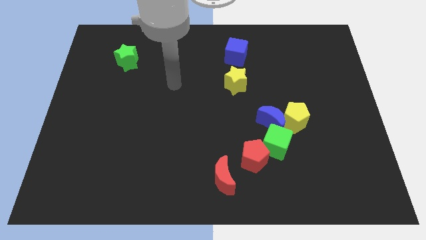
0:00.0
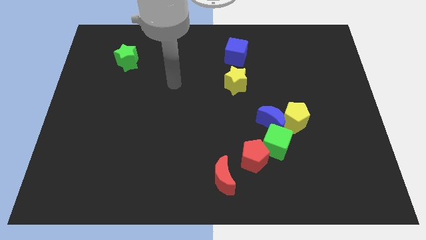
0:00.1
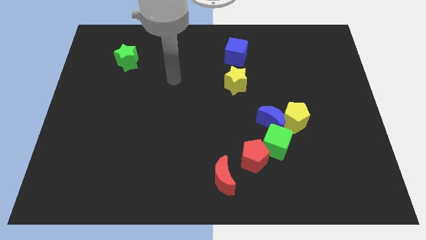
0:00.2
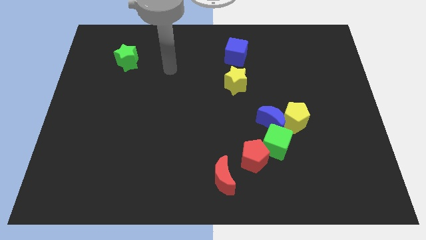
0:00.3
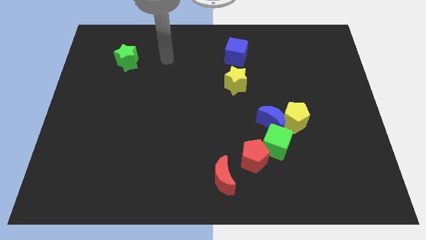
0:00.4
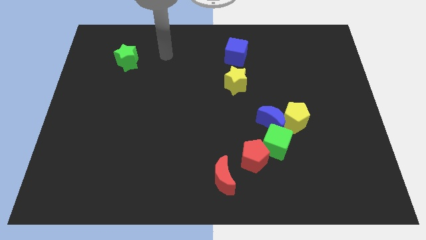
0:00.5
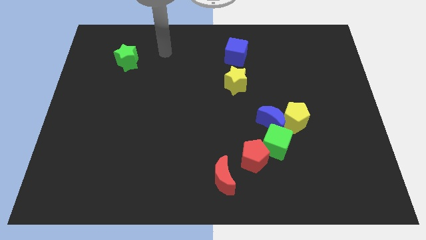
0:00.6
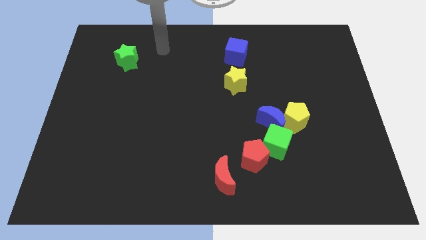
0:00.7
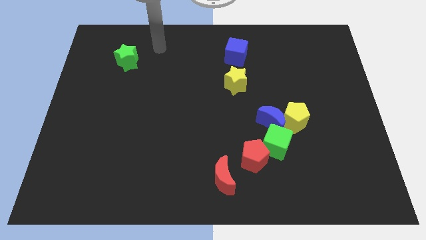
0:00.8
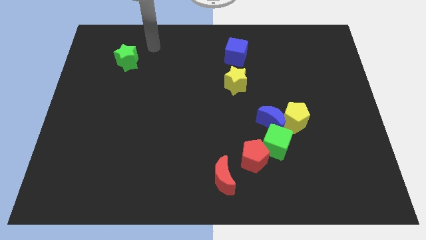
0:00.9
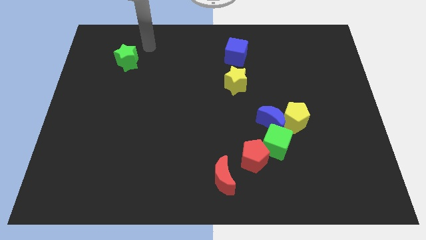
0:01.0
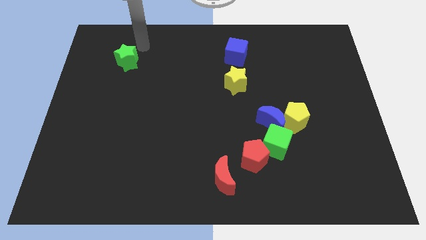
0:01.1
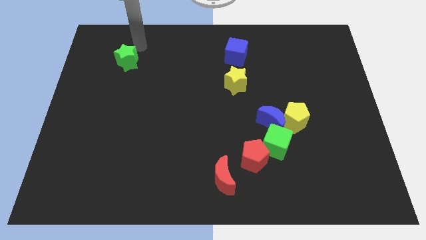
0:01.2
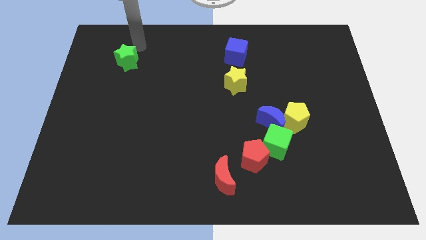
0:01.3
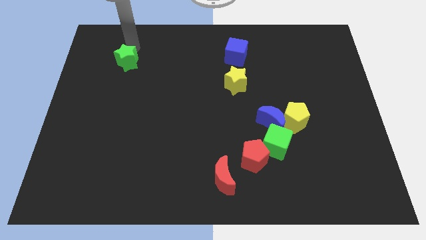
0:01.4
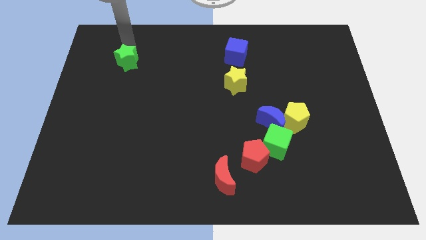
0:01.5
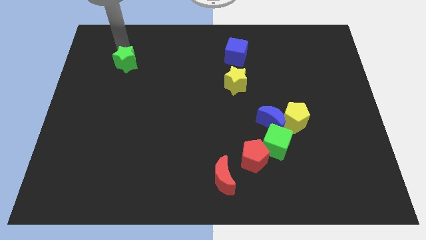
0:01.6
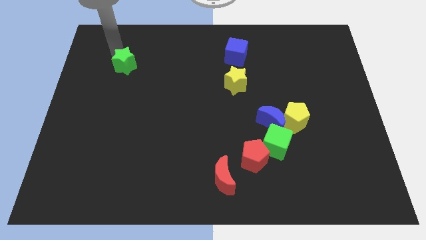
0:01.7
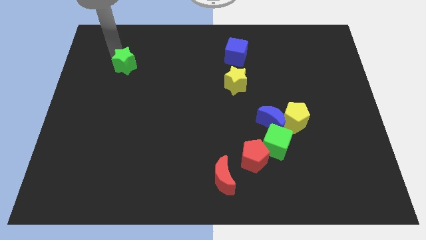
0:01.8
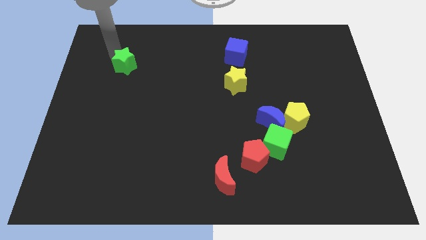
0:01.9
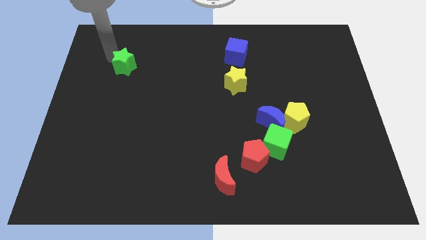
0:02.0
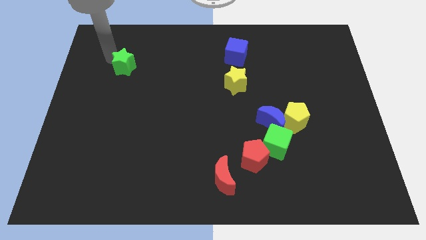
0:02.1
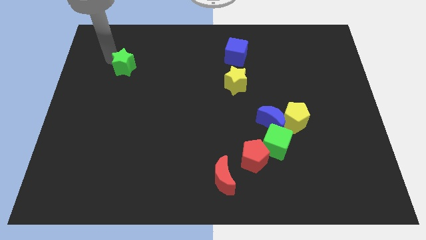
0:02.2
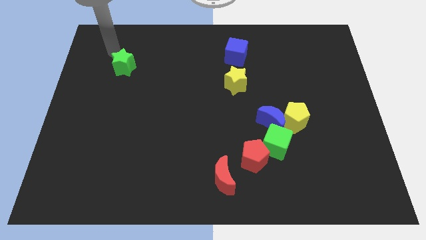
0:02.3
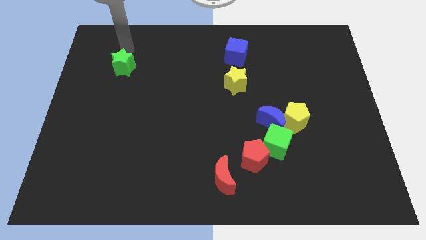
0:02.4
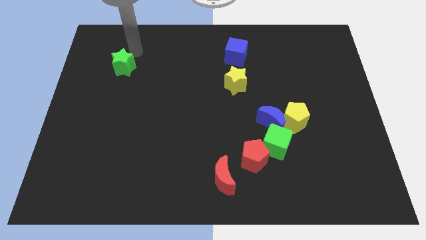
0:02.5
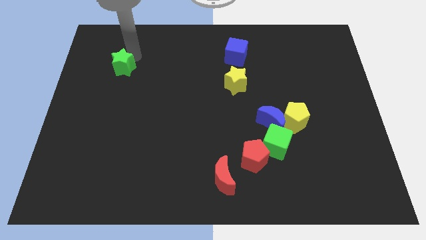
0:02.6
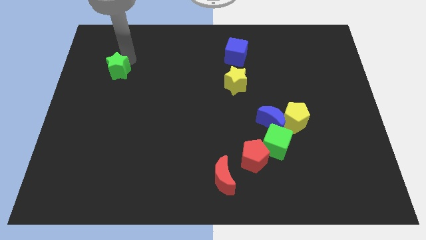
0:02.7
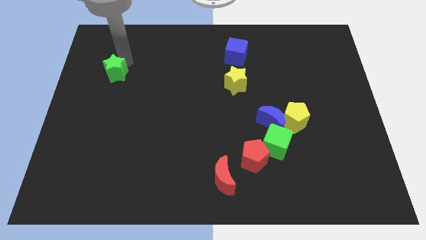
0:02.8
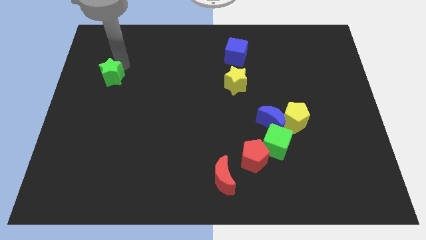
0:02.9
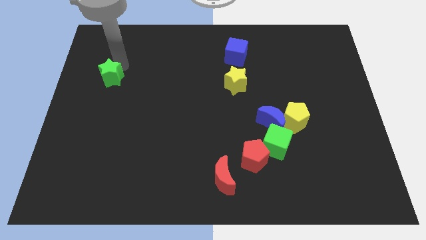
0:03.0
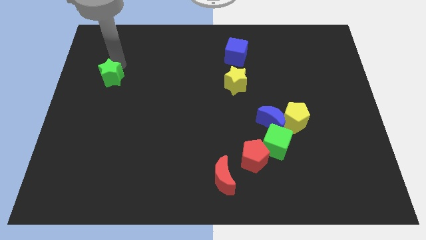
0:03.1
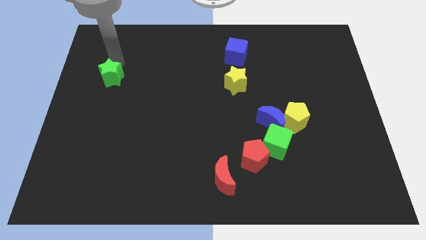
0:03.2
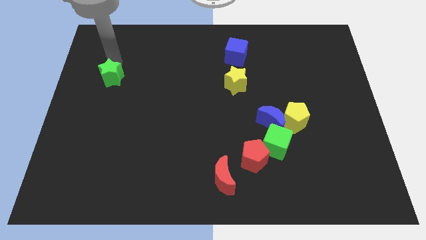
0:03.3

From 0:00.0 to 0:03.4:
push the green star downwards

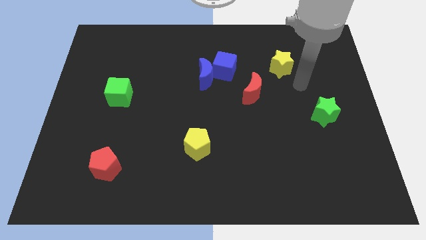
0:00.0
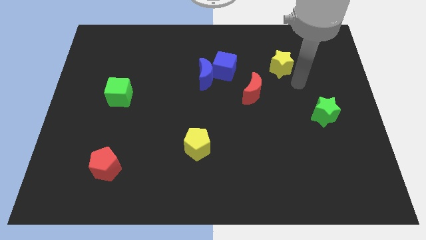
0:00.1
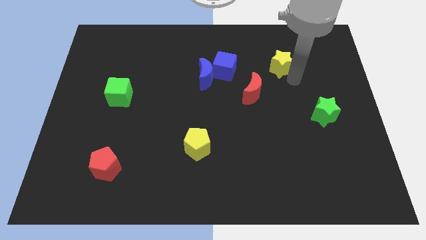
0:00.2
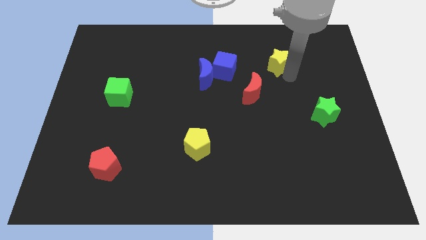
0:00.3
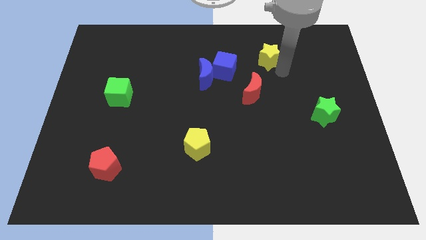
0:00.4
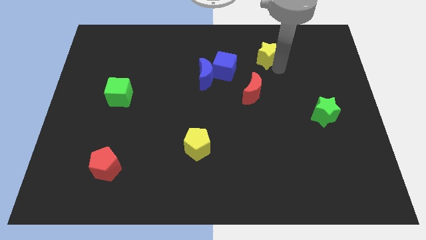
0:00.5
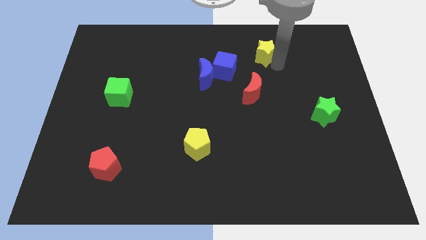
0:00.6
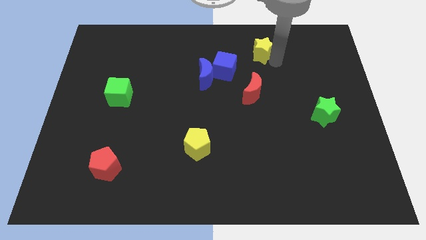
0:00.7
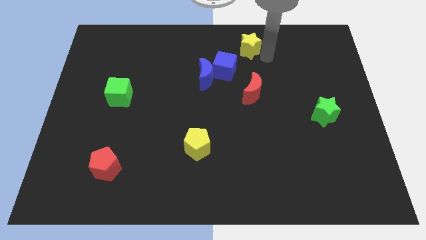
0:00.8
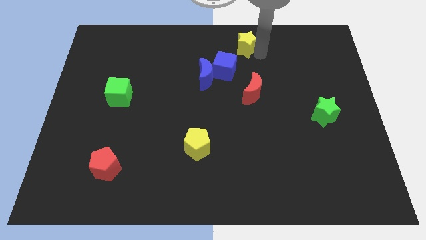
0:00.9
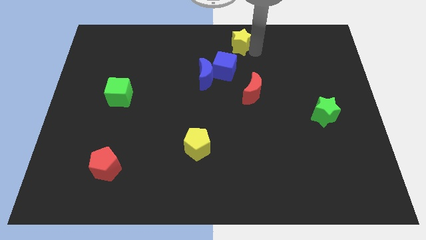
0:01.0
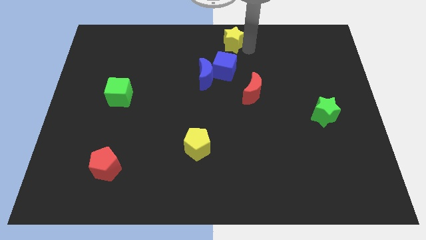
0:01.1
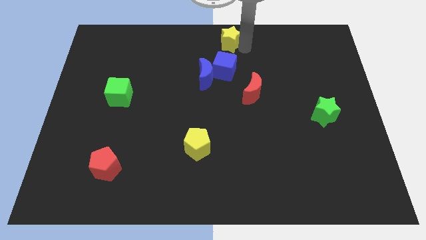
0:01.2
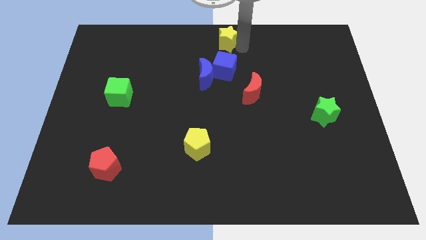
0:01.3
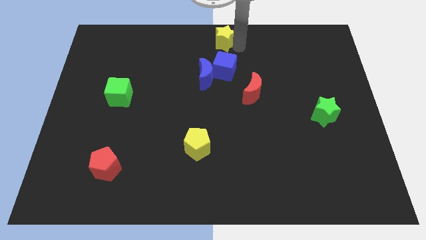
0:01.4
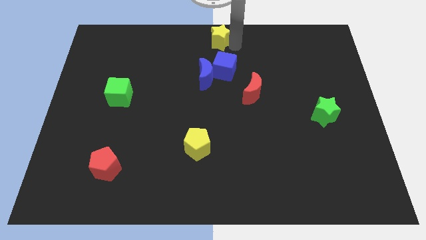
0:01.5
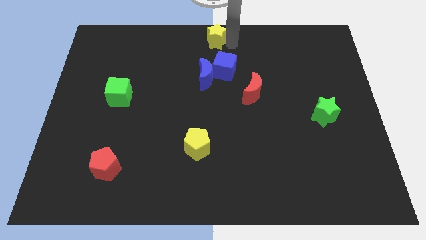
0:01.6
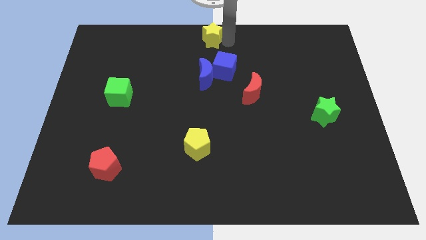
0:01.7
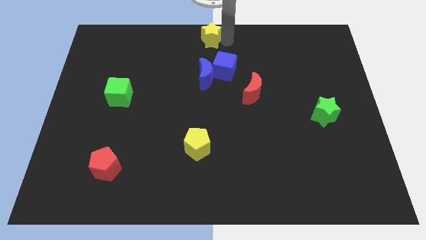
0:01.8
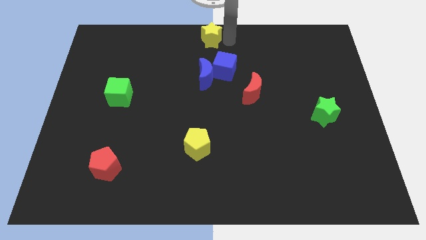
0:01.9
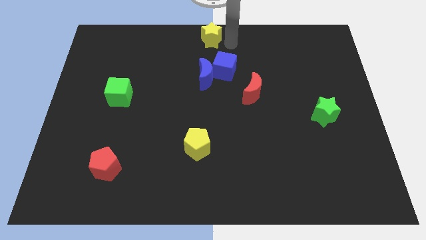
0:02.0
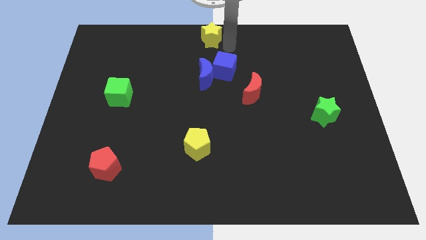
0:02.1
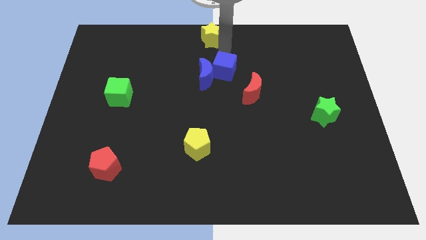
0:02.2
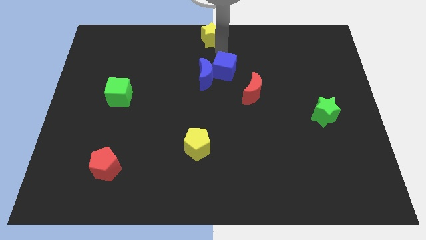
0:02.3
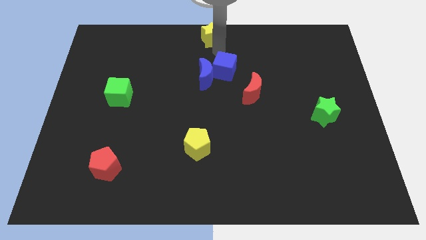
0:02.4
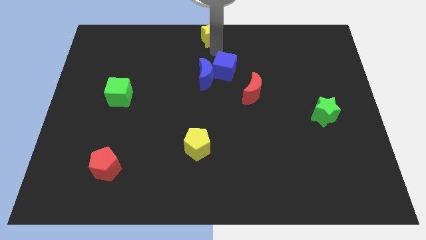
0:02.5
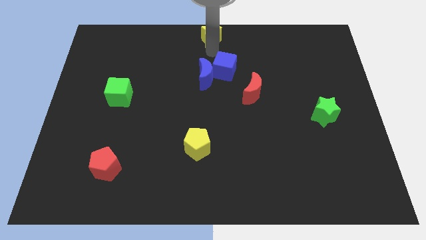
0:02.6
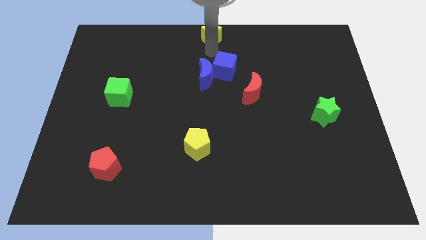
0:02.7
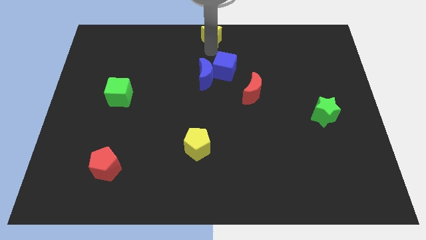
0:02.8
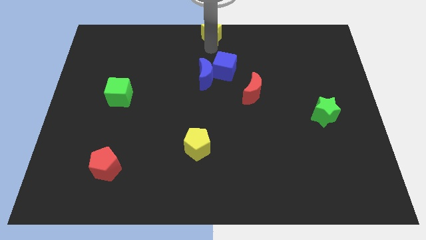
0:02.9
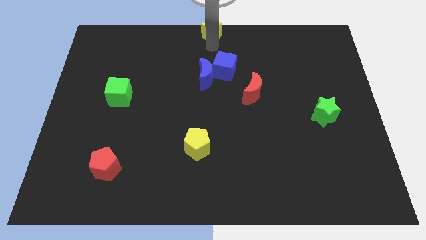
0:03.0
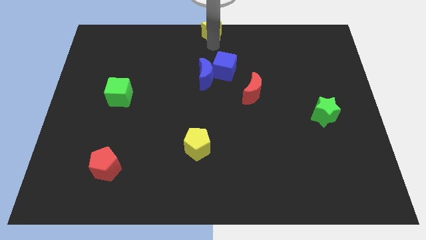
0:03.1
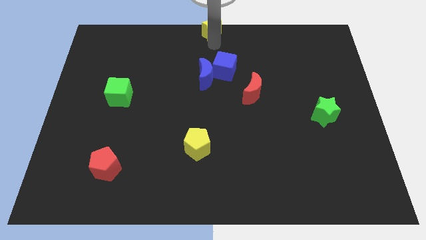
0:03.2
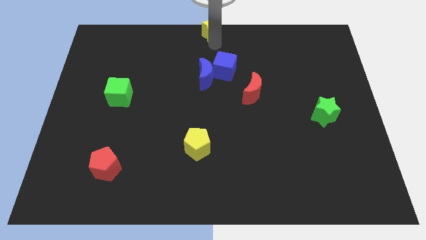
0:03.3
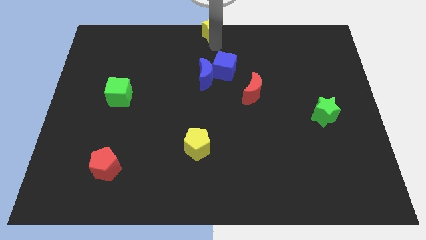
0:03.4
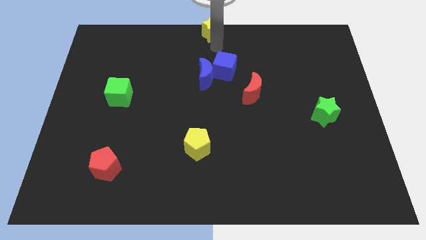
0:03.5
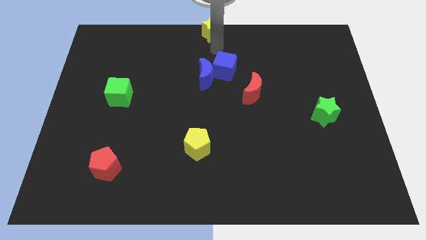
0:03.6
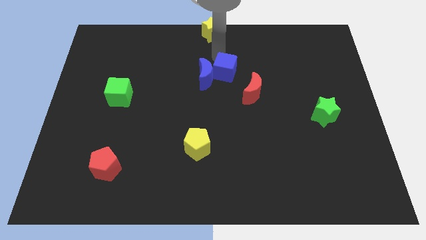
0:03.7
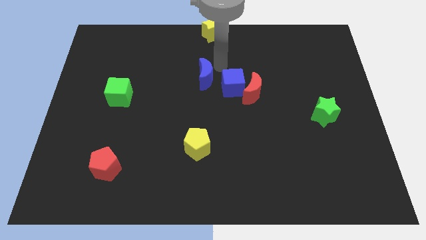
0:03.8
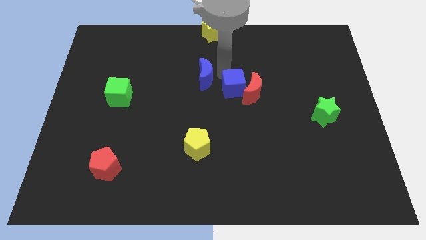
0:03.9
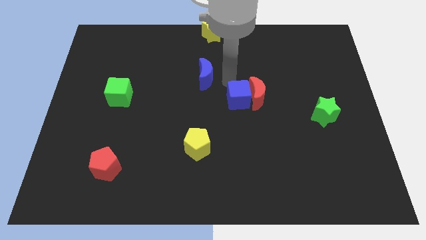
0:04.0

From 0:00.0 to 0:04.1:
move the yellow pentagon to the top middle of the board

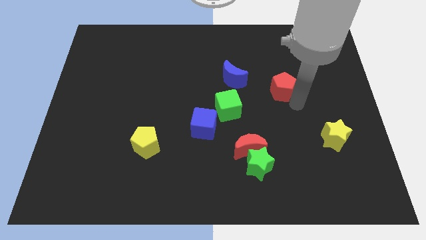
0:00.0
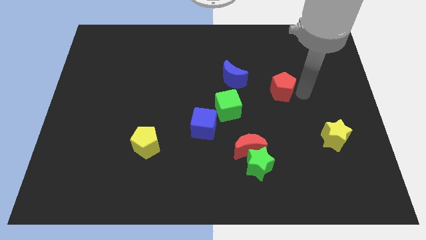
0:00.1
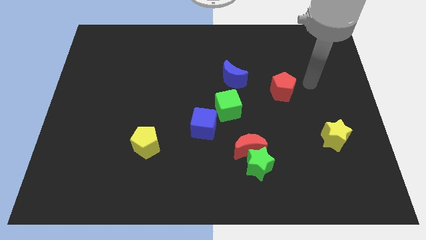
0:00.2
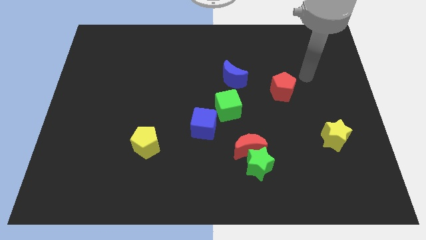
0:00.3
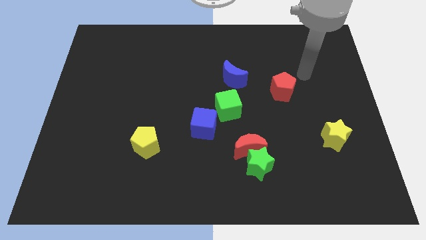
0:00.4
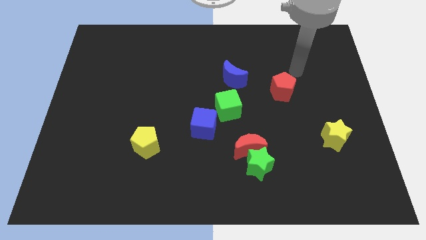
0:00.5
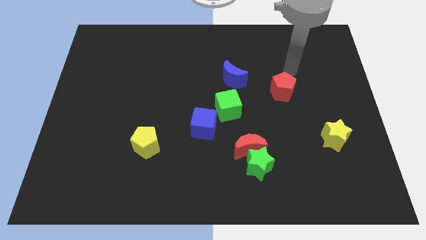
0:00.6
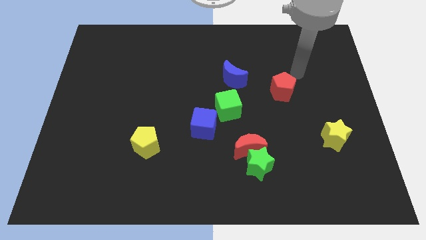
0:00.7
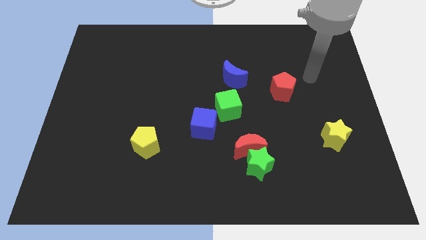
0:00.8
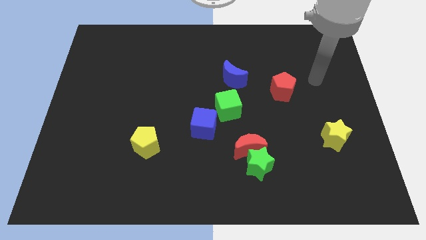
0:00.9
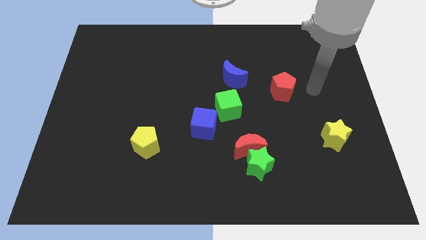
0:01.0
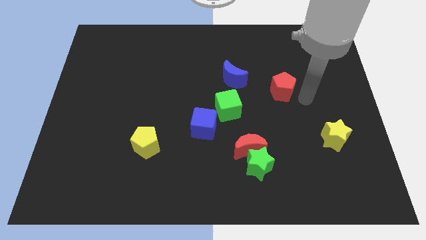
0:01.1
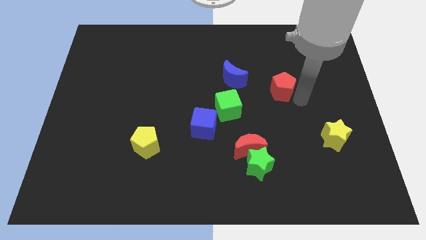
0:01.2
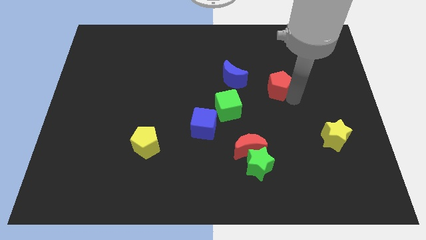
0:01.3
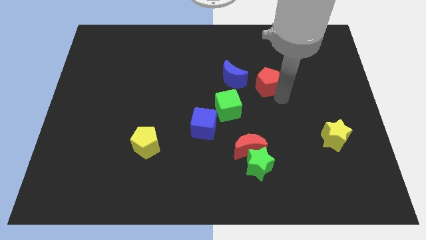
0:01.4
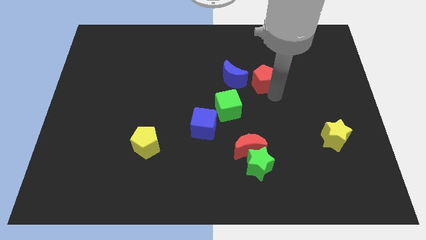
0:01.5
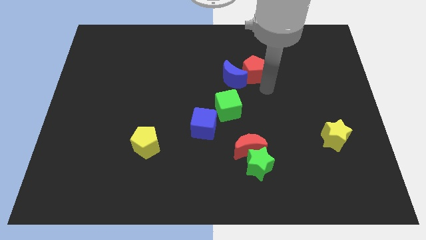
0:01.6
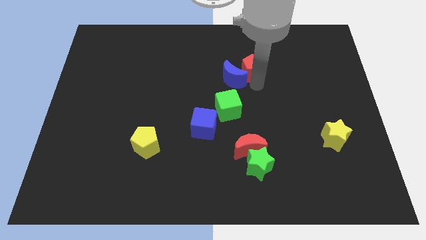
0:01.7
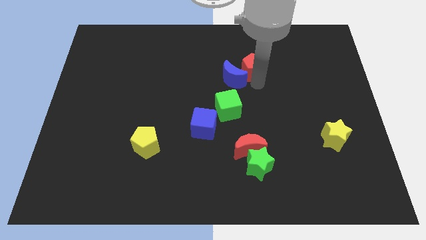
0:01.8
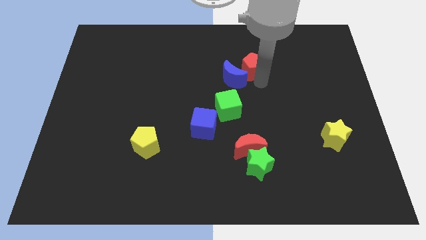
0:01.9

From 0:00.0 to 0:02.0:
put the red pentagon right to the blue moon
